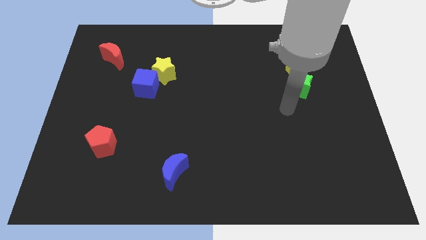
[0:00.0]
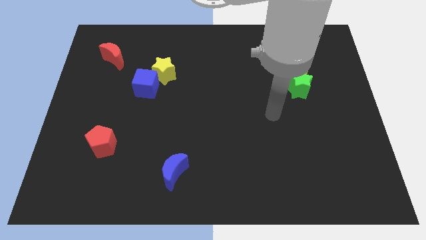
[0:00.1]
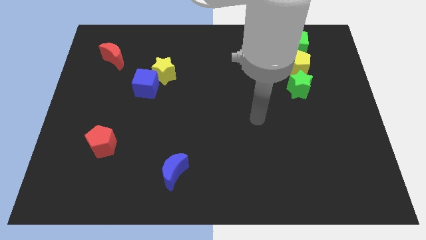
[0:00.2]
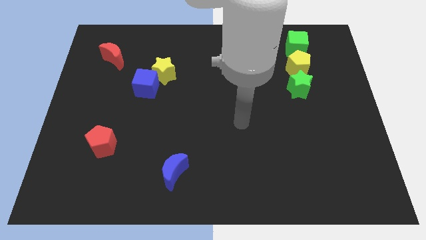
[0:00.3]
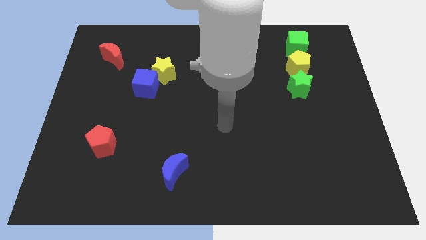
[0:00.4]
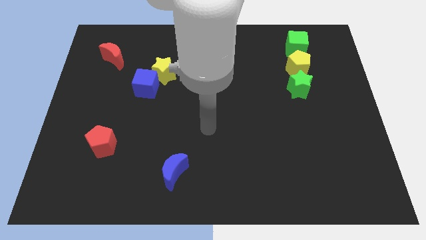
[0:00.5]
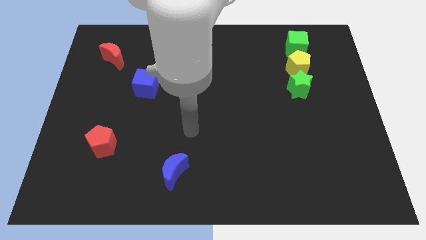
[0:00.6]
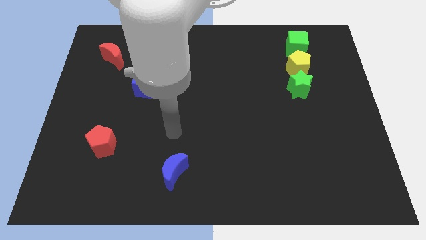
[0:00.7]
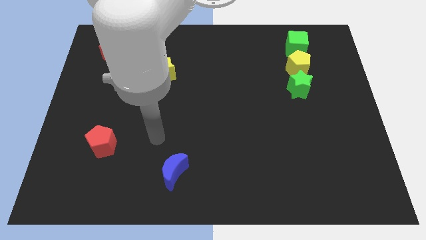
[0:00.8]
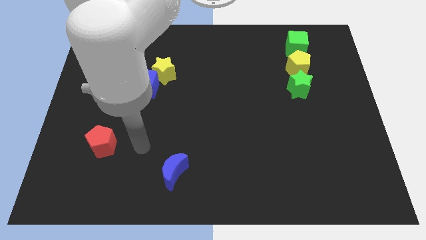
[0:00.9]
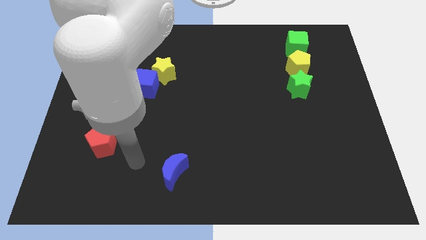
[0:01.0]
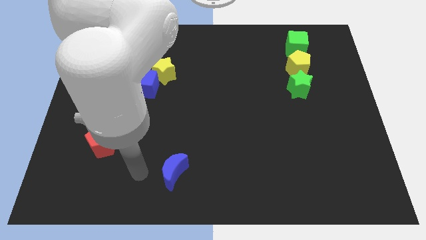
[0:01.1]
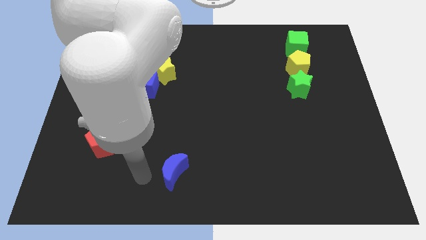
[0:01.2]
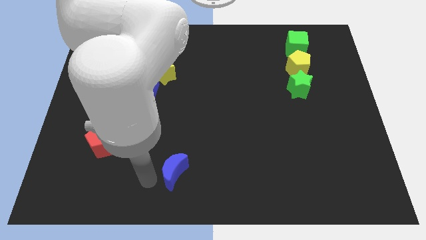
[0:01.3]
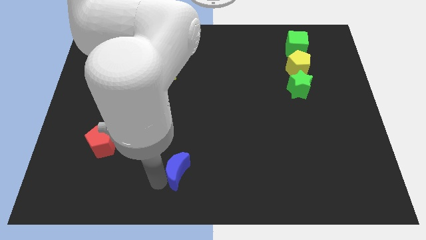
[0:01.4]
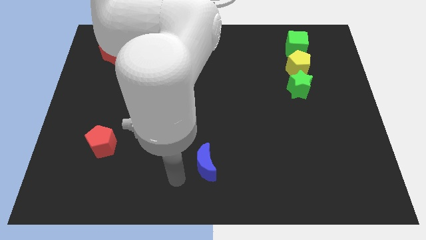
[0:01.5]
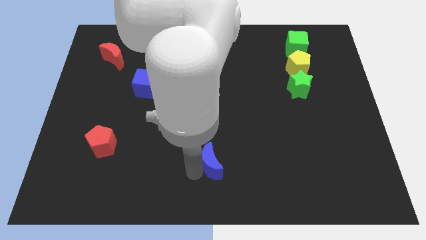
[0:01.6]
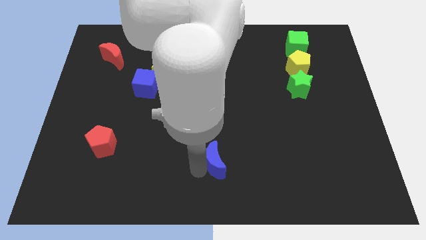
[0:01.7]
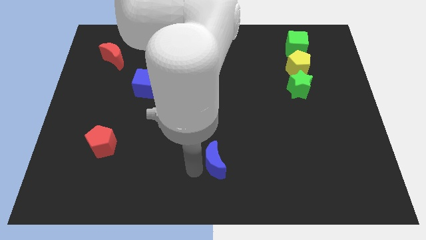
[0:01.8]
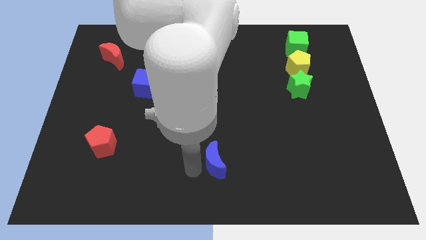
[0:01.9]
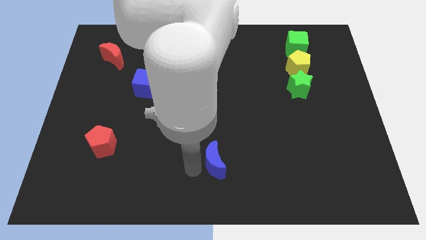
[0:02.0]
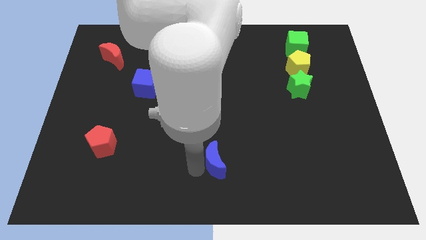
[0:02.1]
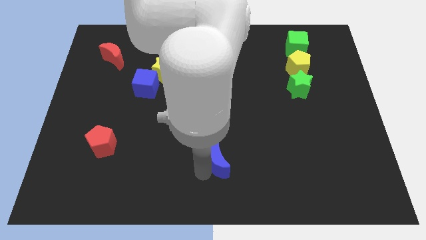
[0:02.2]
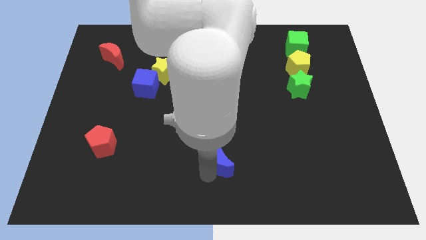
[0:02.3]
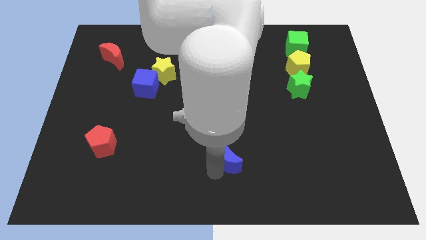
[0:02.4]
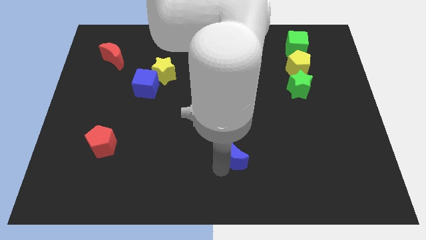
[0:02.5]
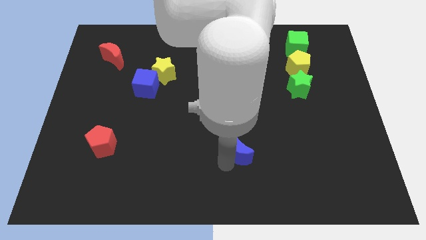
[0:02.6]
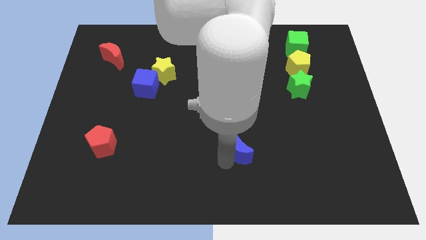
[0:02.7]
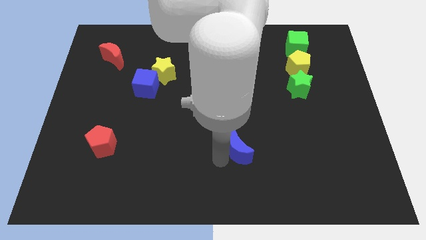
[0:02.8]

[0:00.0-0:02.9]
move the blue crescent towards green star

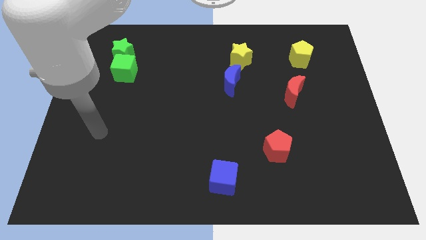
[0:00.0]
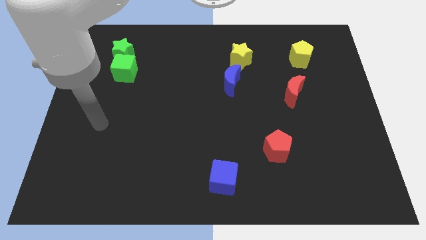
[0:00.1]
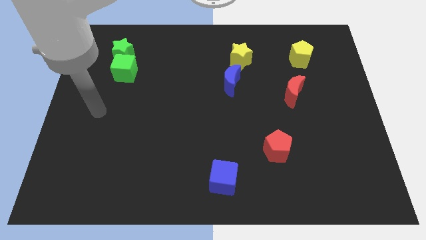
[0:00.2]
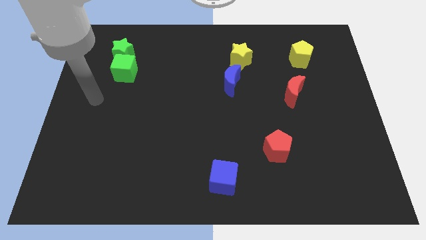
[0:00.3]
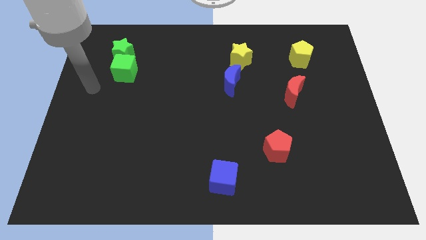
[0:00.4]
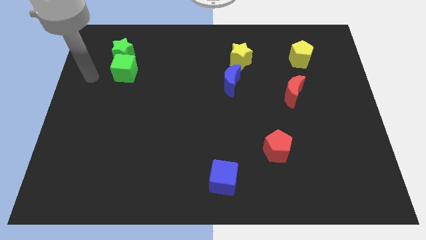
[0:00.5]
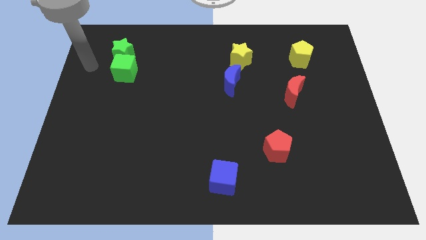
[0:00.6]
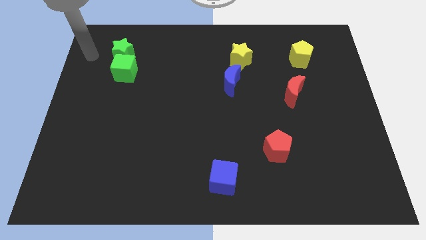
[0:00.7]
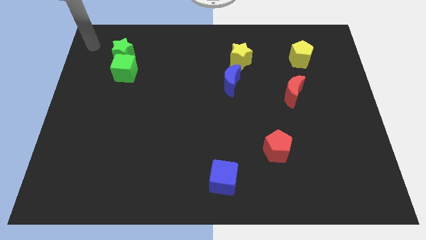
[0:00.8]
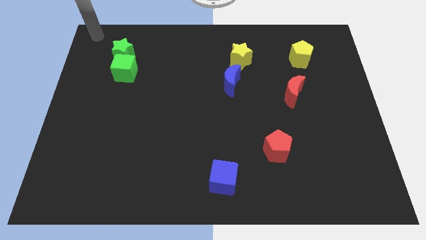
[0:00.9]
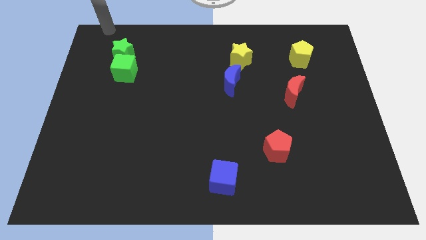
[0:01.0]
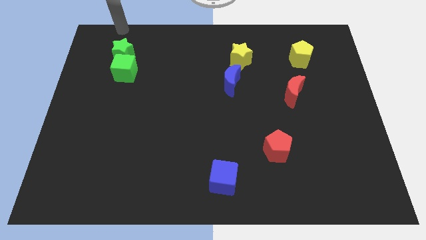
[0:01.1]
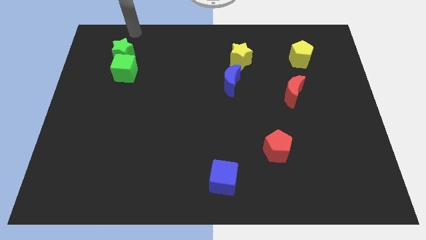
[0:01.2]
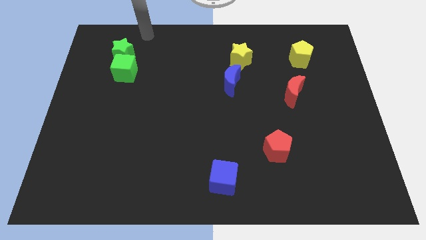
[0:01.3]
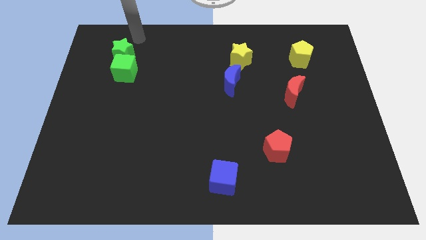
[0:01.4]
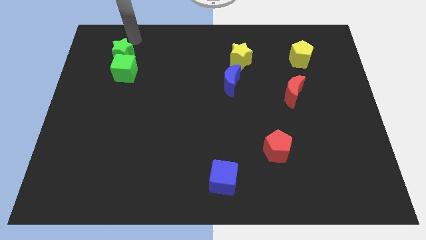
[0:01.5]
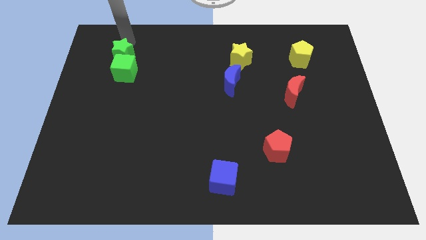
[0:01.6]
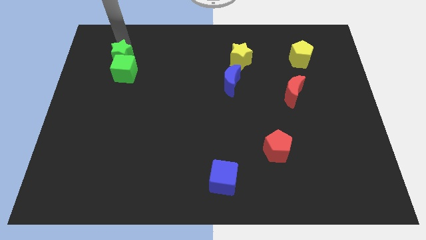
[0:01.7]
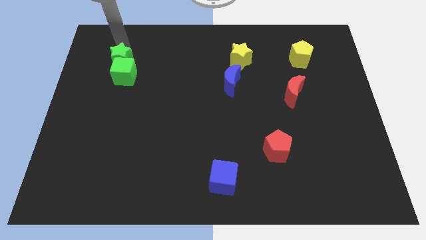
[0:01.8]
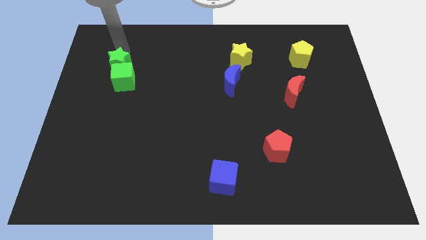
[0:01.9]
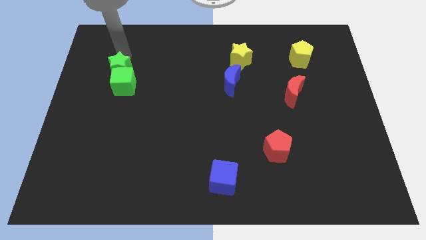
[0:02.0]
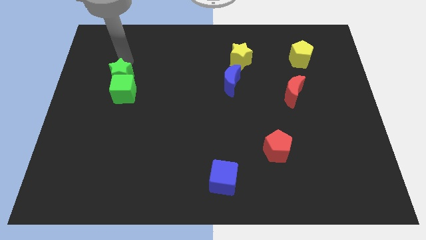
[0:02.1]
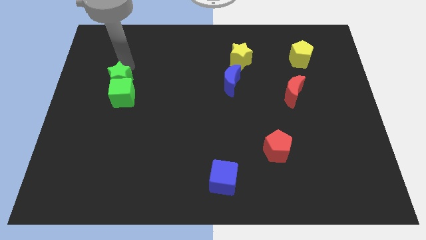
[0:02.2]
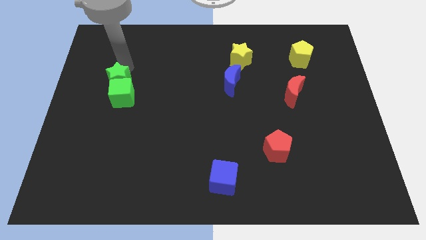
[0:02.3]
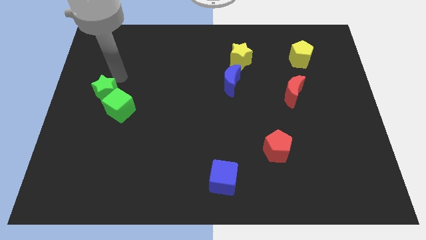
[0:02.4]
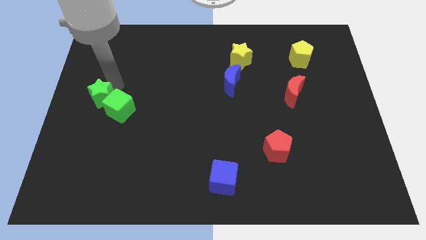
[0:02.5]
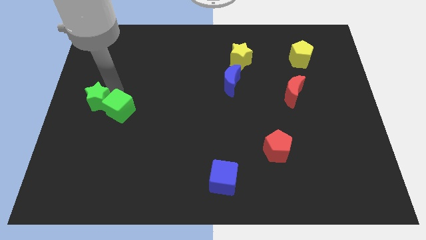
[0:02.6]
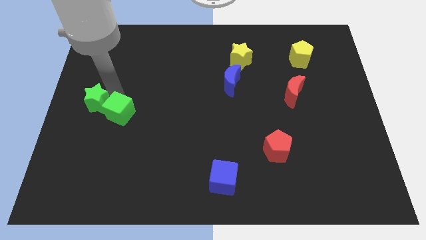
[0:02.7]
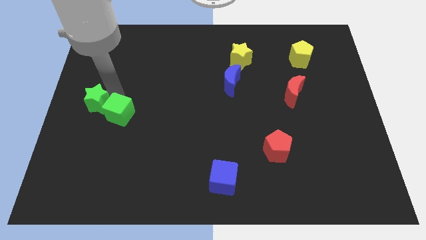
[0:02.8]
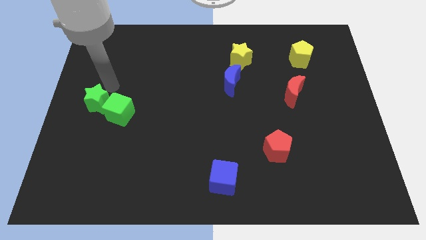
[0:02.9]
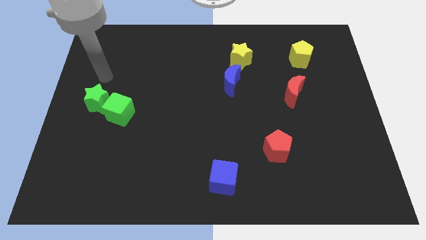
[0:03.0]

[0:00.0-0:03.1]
push the green blocks slightly towards the bottom

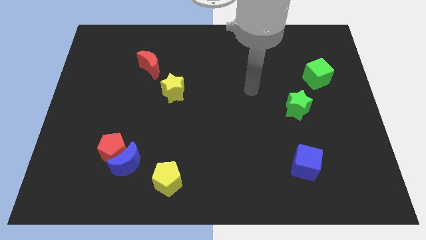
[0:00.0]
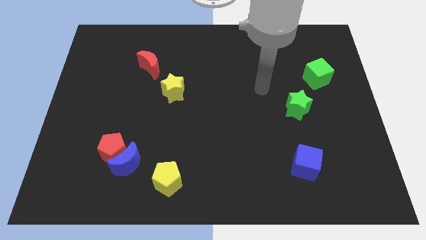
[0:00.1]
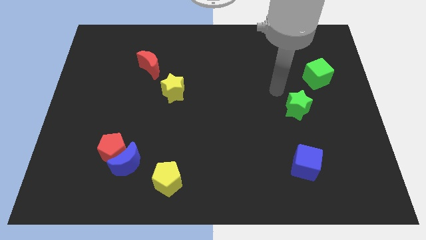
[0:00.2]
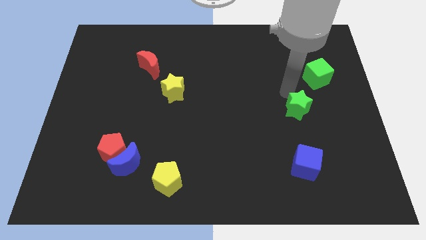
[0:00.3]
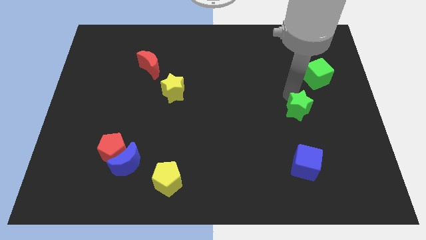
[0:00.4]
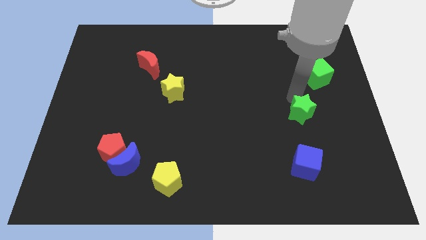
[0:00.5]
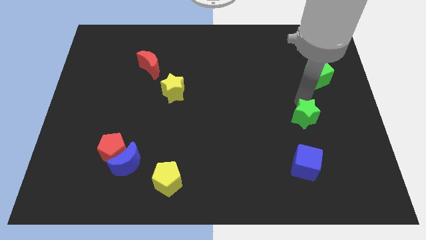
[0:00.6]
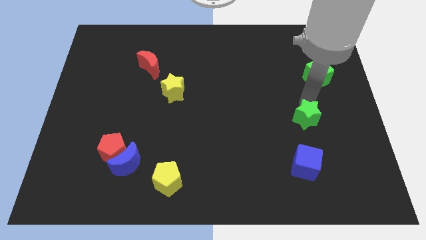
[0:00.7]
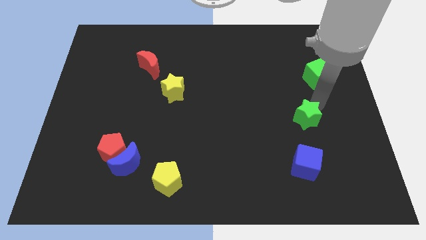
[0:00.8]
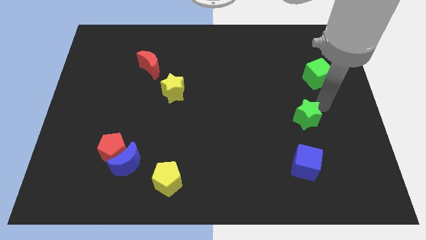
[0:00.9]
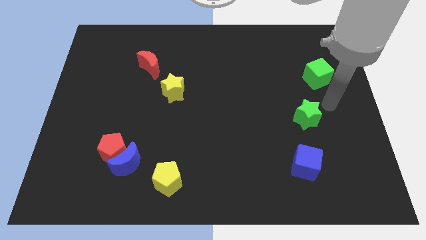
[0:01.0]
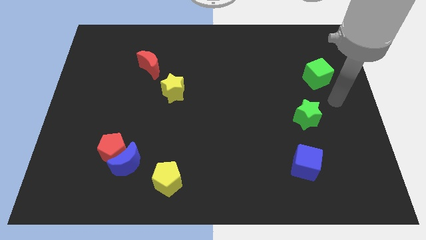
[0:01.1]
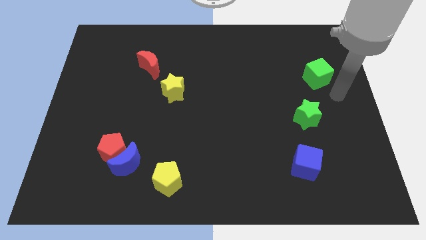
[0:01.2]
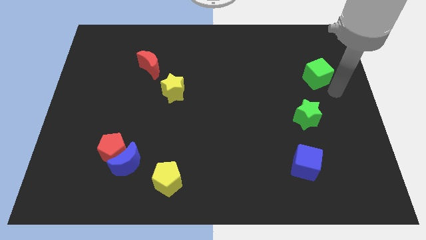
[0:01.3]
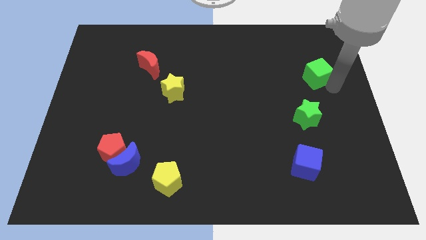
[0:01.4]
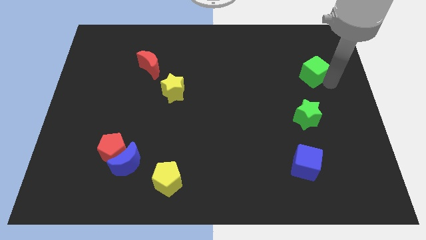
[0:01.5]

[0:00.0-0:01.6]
push green star to the top of blue cube

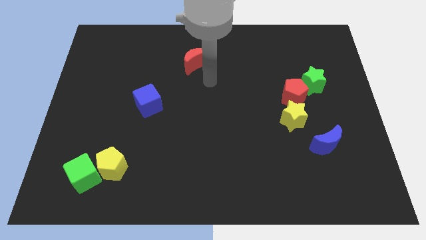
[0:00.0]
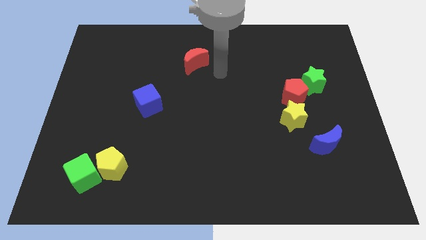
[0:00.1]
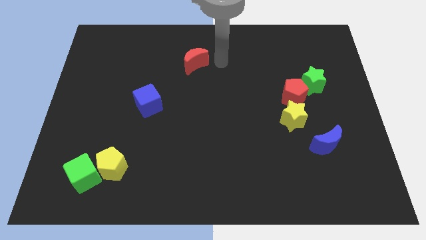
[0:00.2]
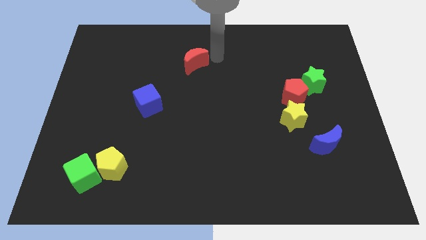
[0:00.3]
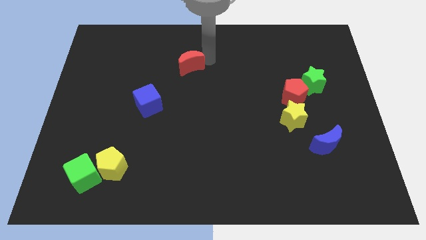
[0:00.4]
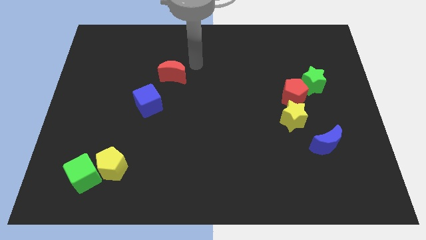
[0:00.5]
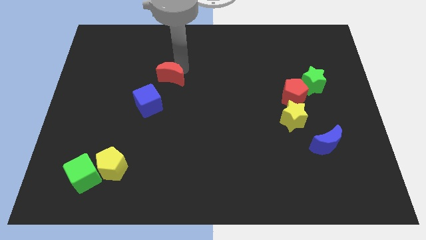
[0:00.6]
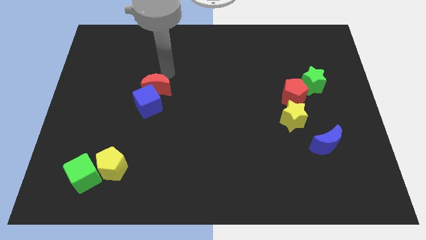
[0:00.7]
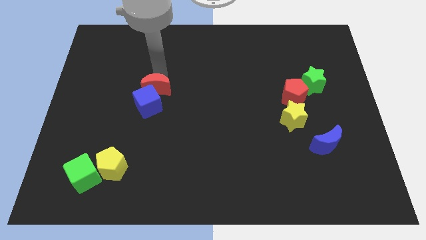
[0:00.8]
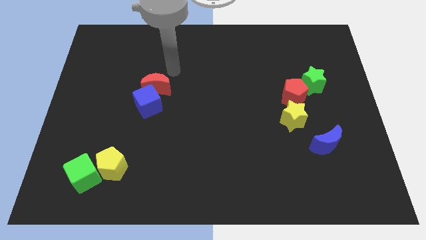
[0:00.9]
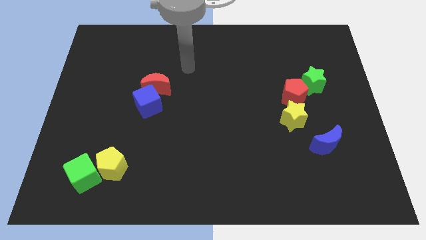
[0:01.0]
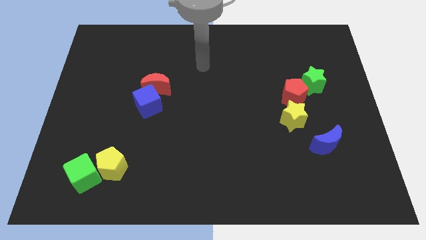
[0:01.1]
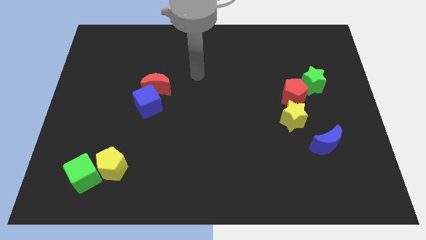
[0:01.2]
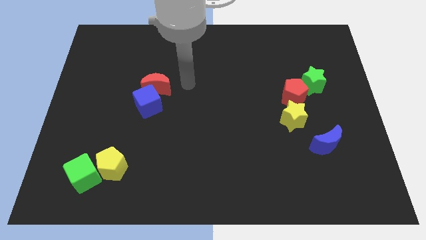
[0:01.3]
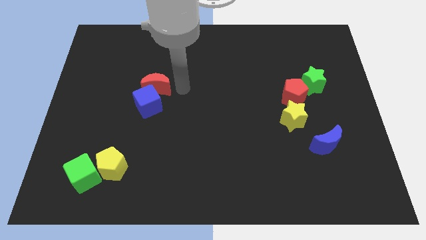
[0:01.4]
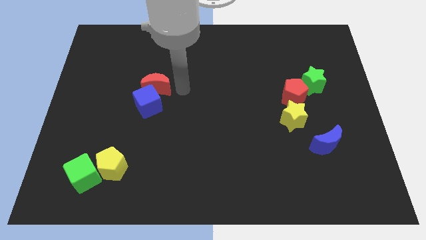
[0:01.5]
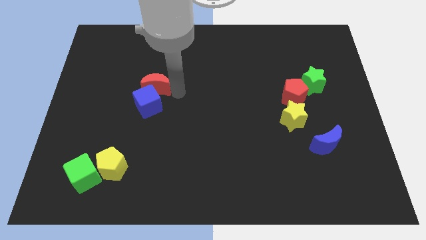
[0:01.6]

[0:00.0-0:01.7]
place the red moon above the blue cube
